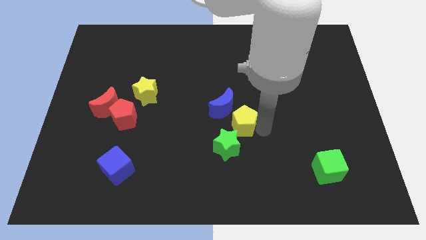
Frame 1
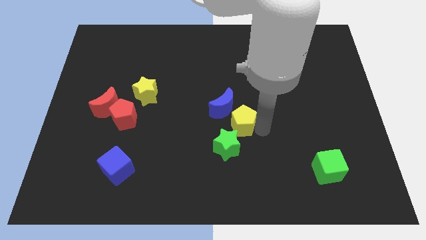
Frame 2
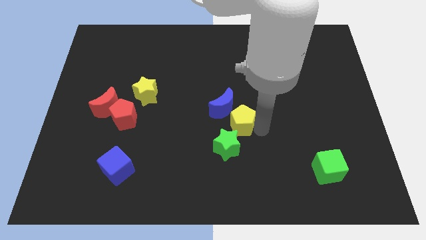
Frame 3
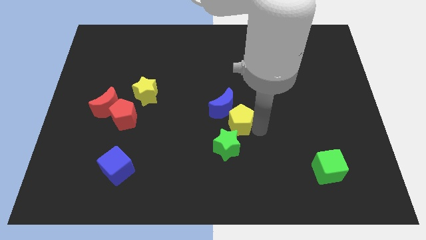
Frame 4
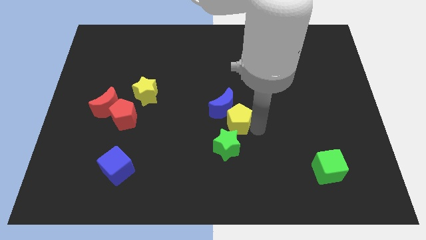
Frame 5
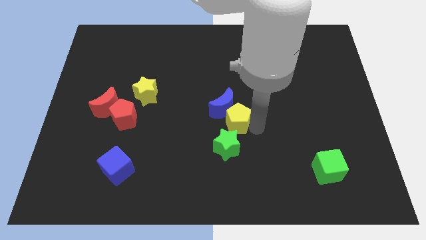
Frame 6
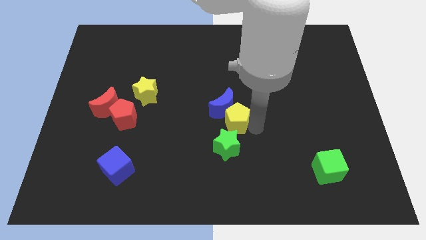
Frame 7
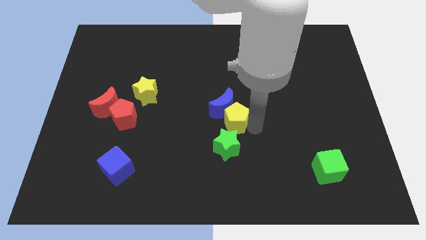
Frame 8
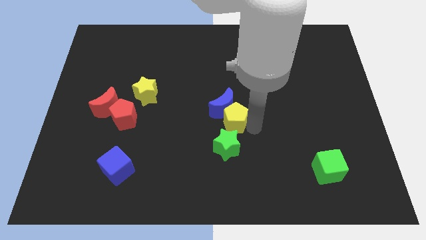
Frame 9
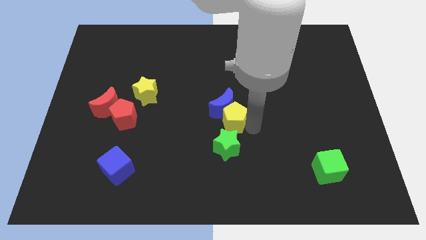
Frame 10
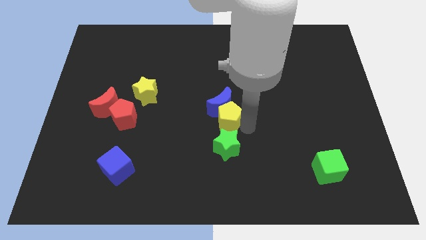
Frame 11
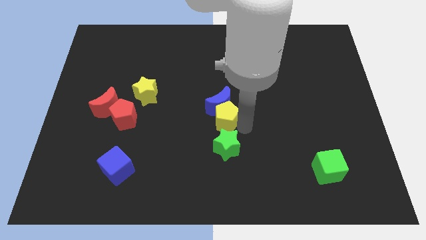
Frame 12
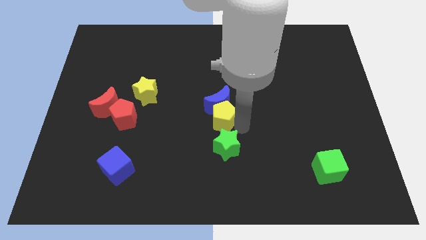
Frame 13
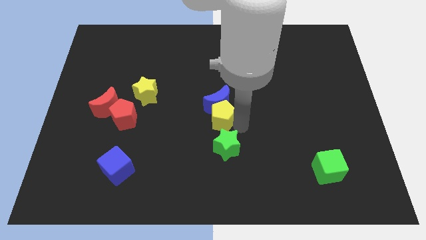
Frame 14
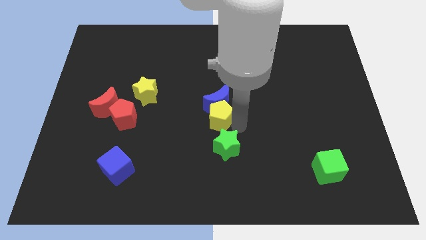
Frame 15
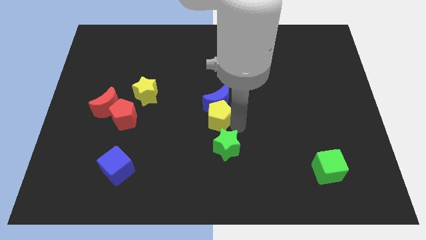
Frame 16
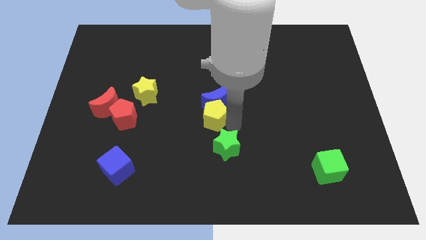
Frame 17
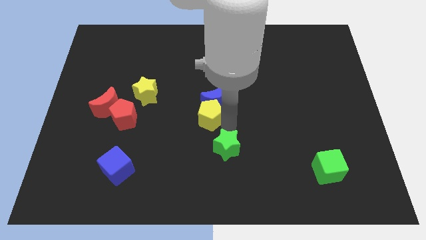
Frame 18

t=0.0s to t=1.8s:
move the yellow pentagon in between green star and blue moon

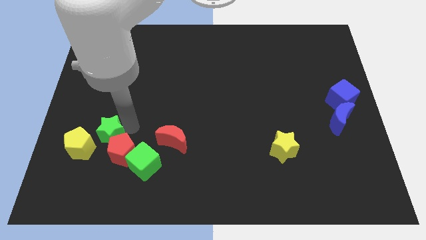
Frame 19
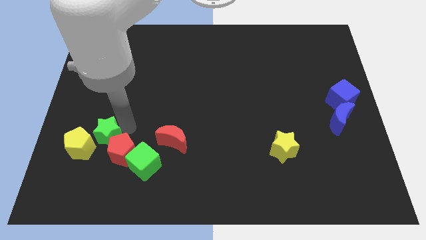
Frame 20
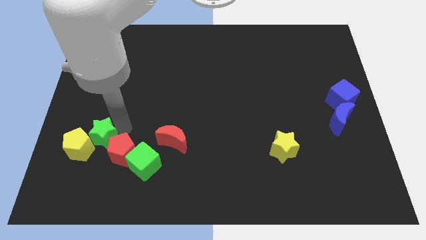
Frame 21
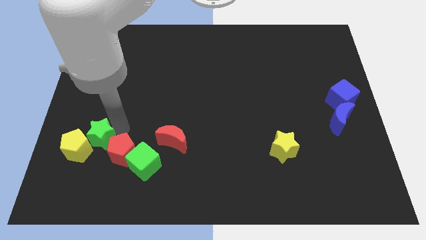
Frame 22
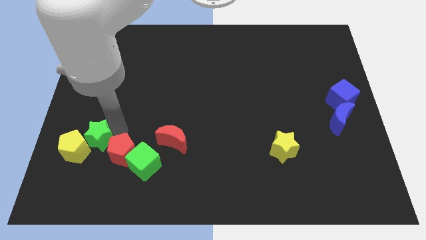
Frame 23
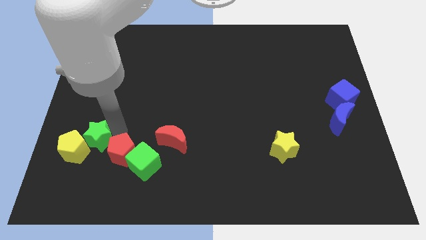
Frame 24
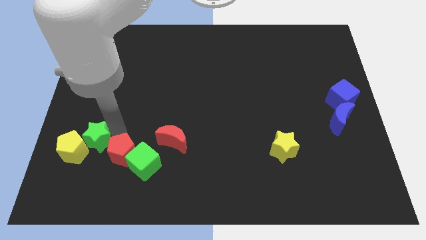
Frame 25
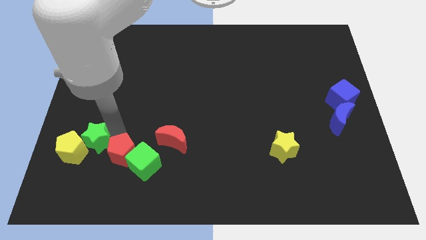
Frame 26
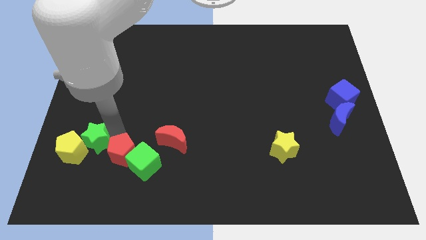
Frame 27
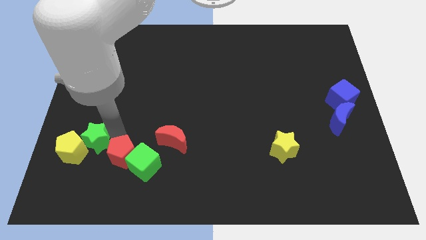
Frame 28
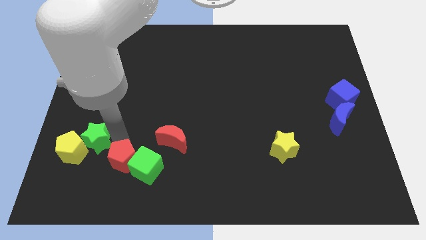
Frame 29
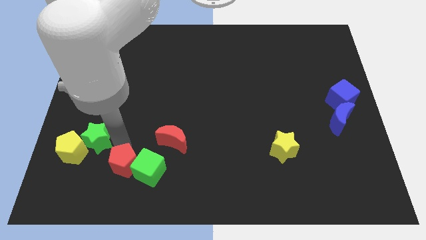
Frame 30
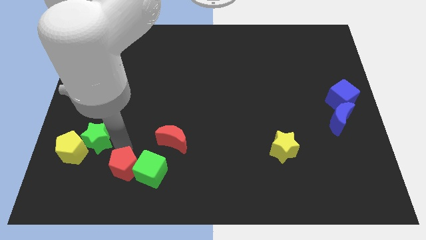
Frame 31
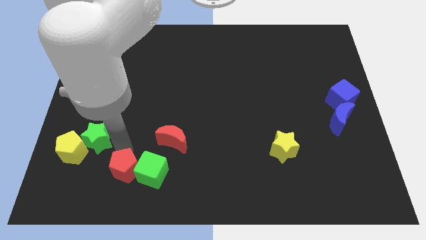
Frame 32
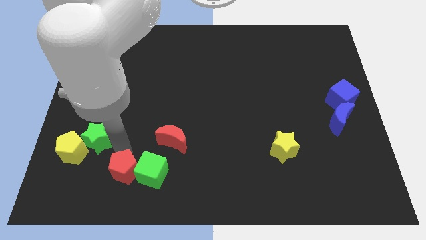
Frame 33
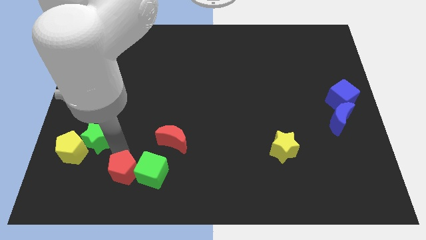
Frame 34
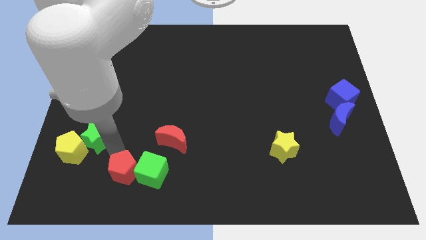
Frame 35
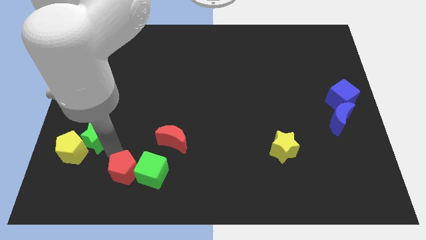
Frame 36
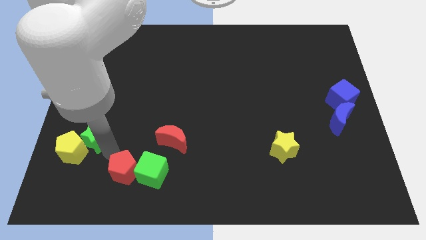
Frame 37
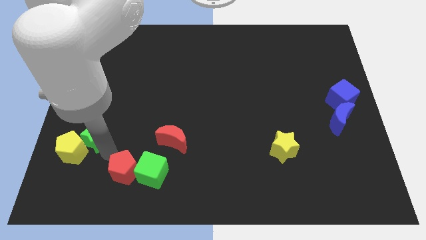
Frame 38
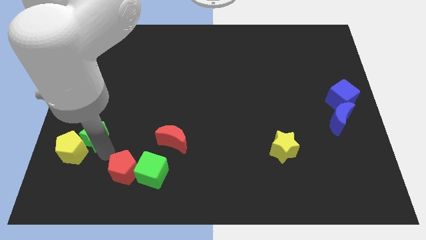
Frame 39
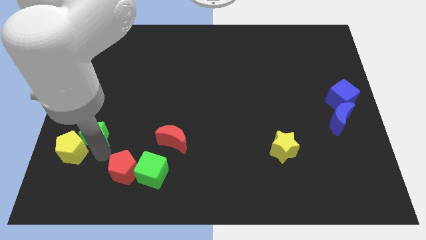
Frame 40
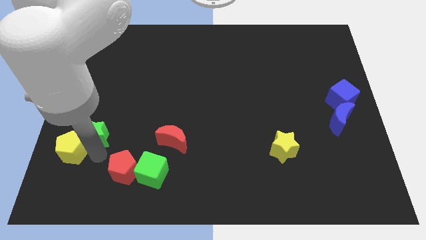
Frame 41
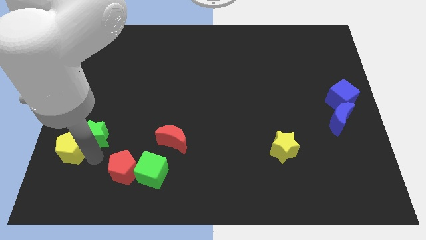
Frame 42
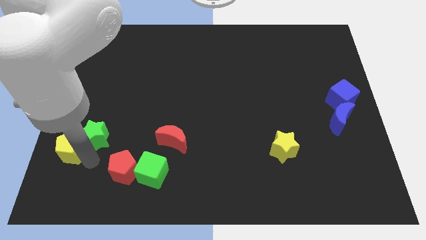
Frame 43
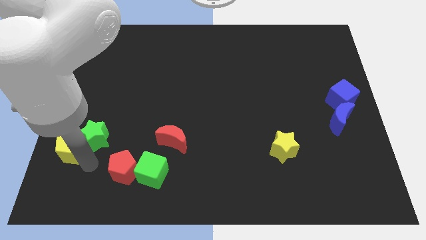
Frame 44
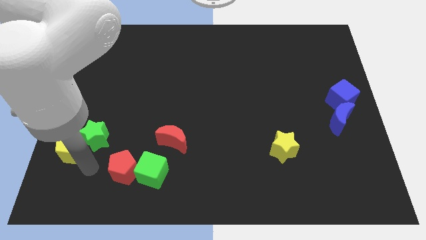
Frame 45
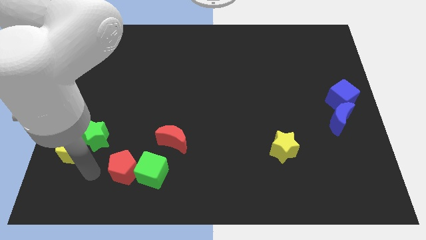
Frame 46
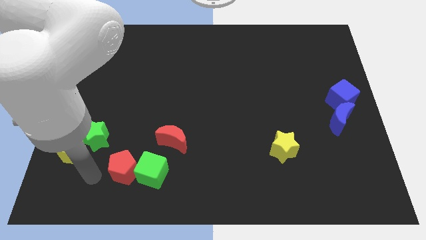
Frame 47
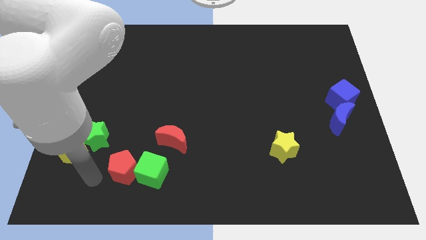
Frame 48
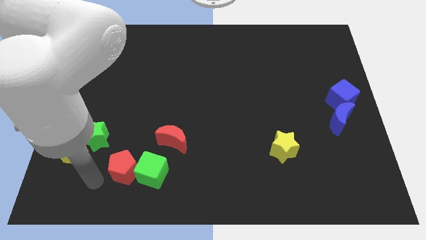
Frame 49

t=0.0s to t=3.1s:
separate red pentagon and green cube from green star

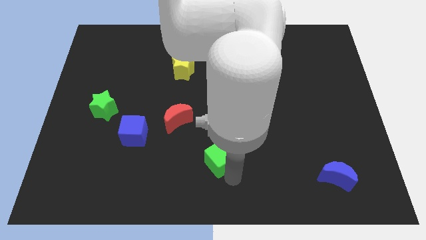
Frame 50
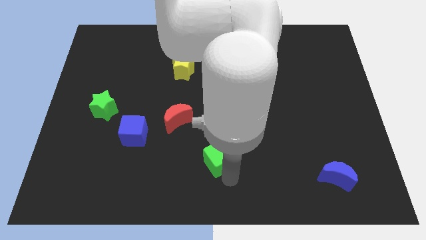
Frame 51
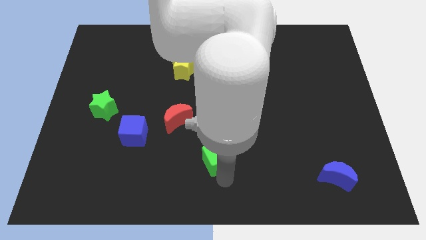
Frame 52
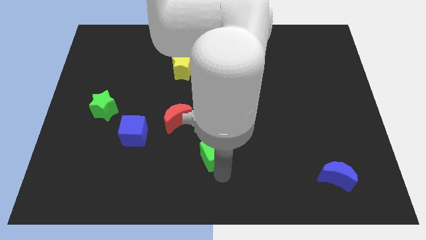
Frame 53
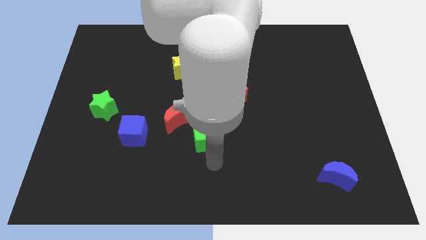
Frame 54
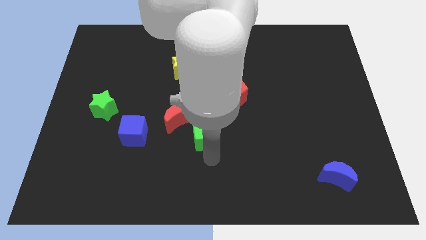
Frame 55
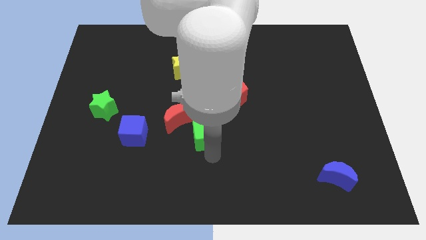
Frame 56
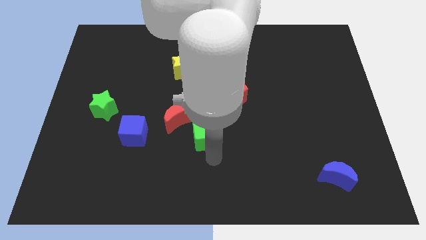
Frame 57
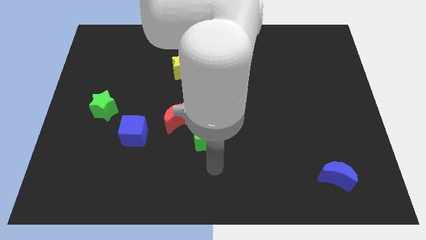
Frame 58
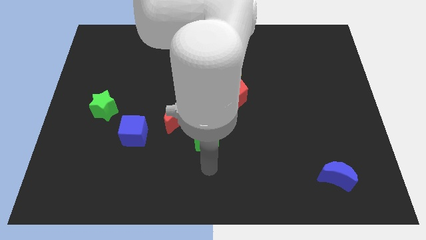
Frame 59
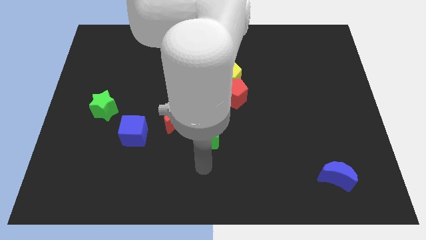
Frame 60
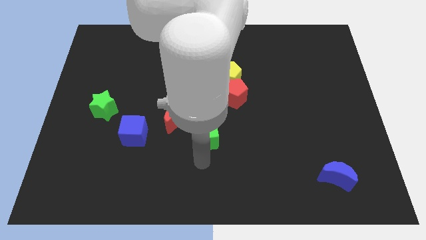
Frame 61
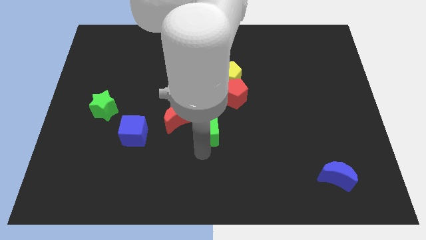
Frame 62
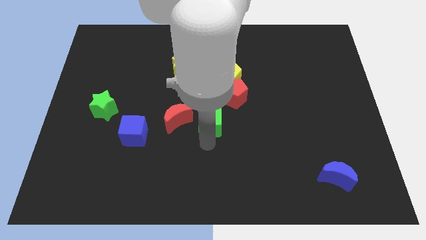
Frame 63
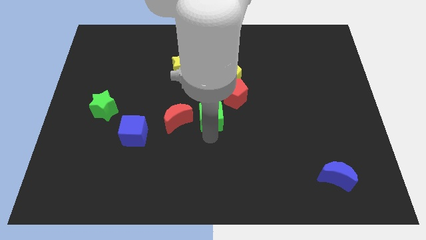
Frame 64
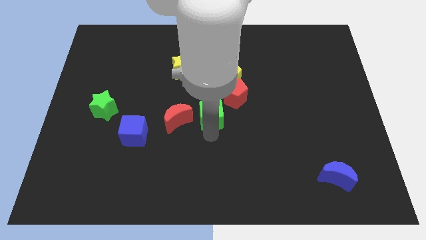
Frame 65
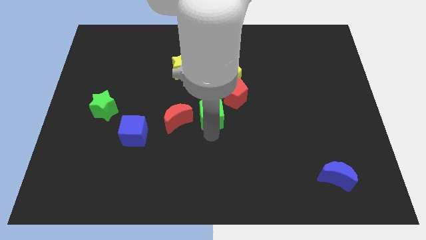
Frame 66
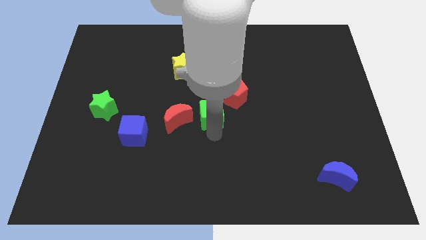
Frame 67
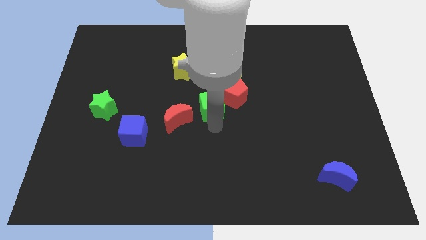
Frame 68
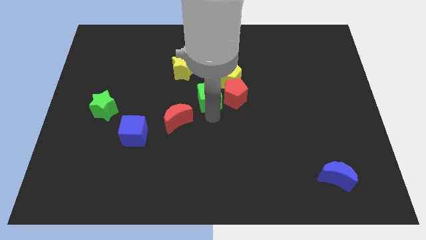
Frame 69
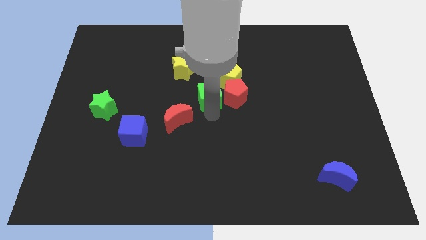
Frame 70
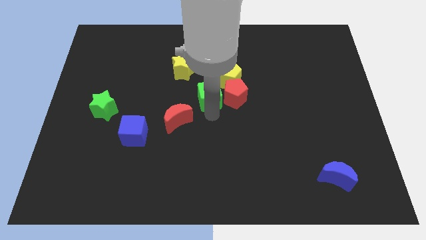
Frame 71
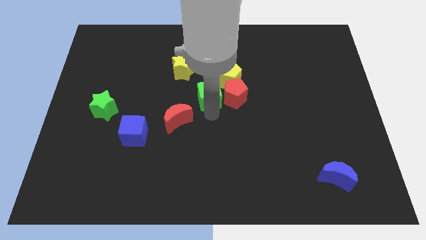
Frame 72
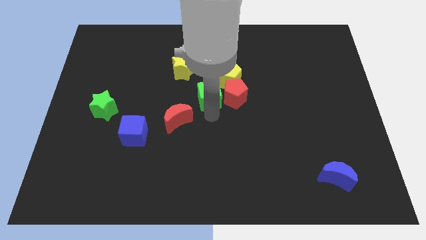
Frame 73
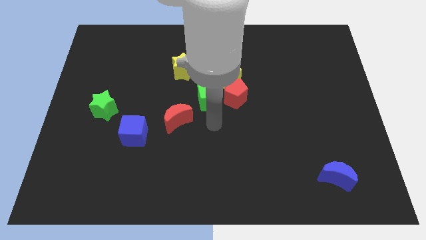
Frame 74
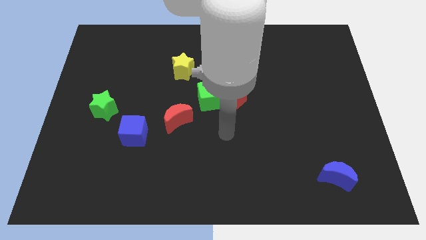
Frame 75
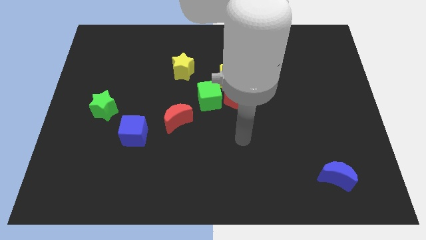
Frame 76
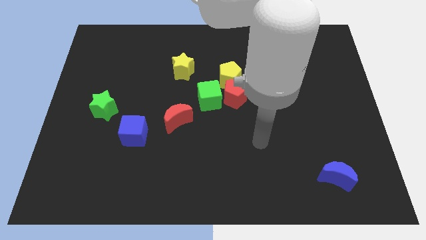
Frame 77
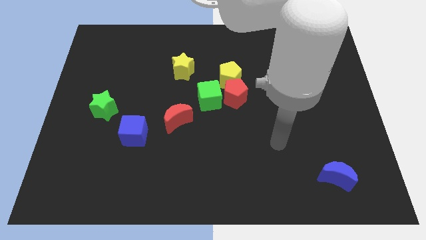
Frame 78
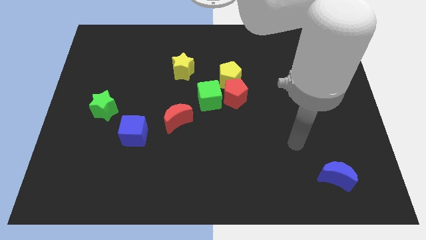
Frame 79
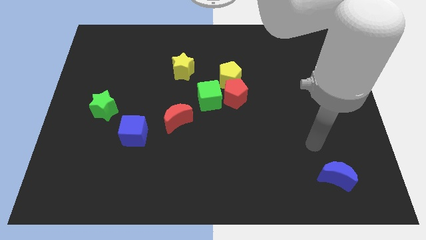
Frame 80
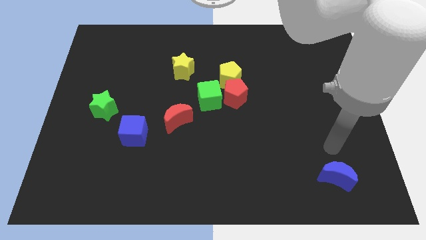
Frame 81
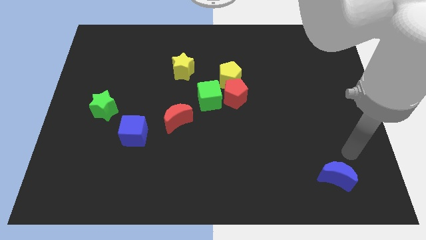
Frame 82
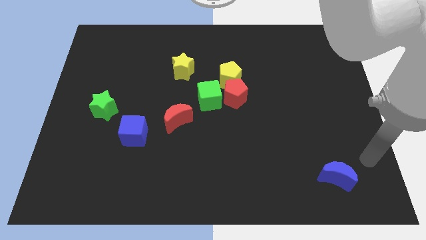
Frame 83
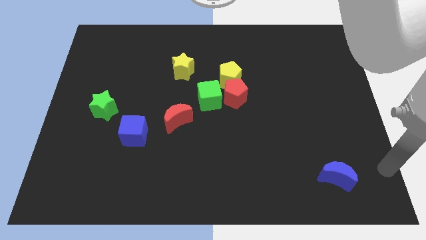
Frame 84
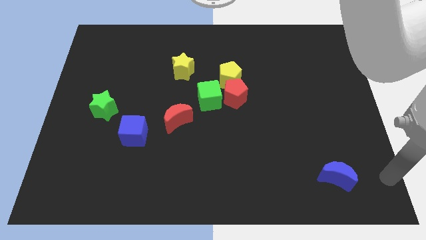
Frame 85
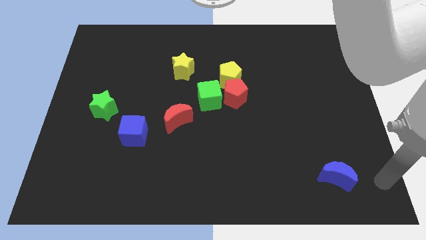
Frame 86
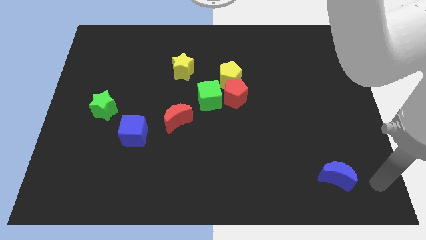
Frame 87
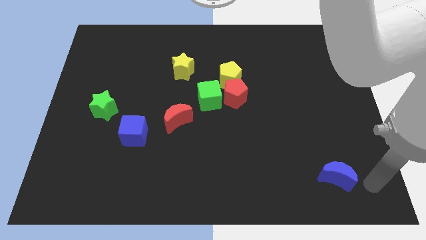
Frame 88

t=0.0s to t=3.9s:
place the green cube in between the red crescent and red pentagon

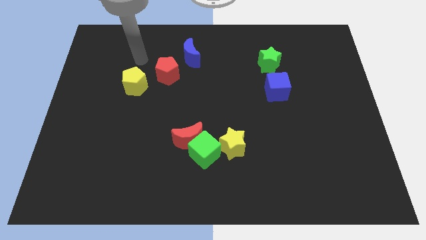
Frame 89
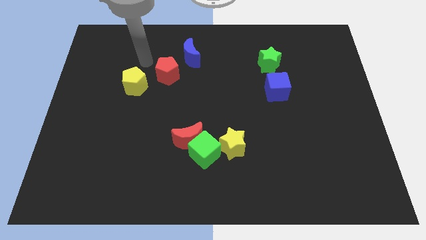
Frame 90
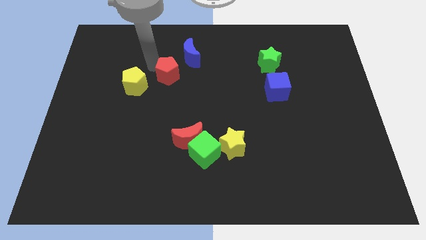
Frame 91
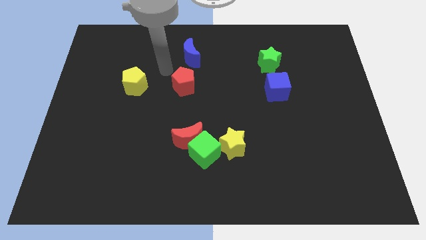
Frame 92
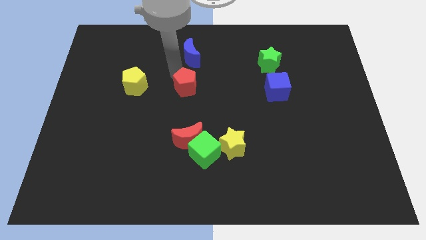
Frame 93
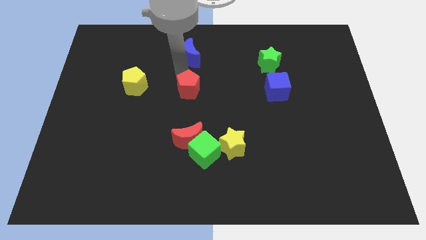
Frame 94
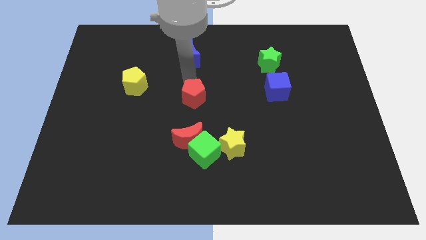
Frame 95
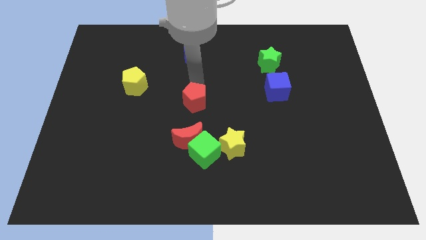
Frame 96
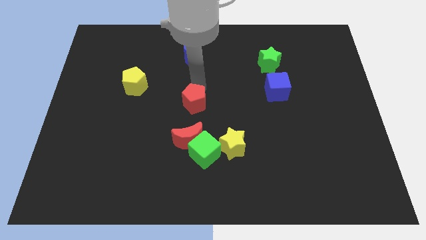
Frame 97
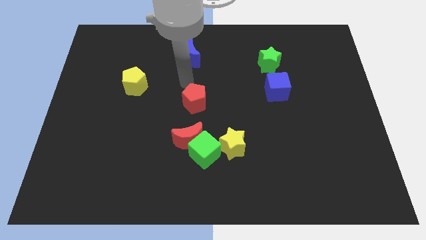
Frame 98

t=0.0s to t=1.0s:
move the red pentagon to the center of the board
